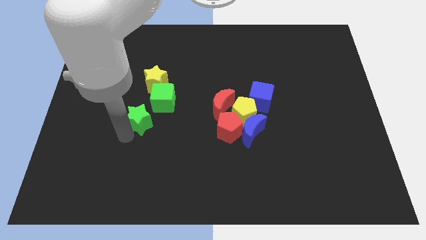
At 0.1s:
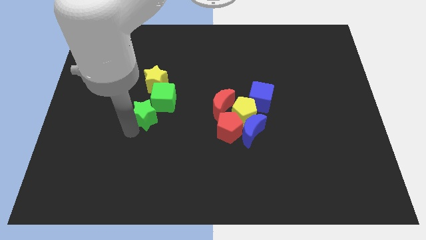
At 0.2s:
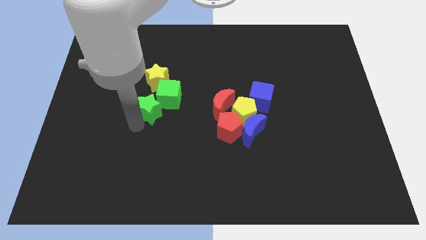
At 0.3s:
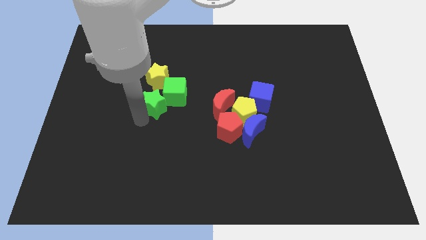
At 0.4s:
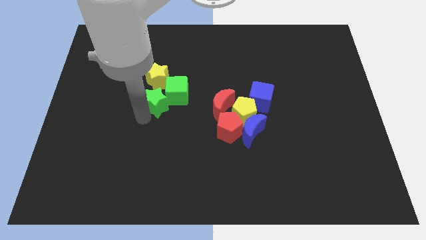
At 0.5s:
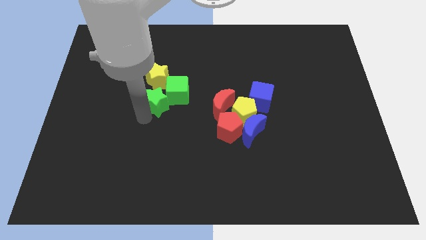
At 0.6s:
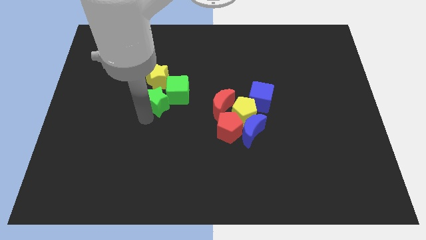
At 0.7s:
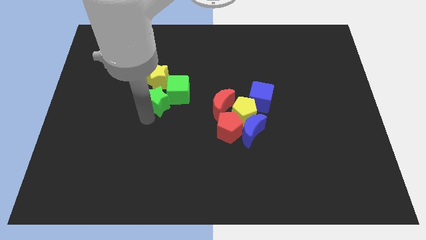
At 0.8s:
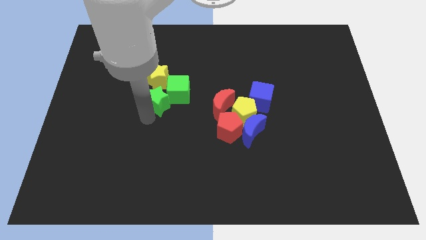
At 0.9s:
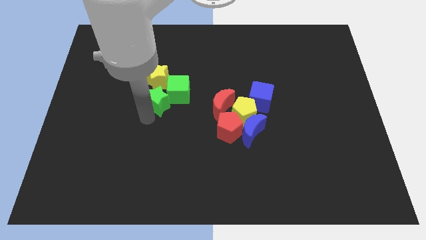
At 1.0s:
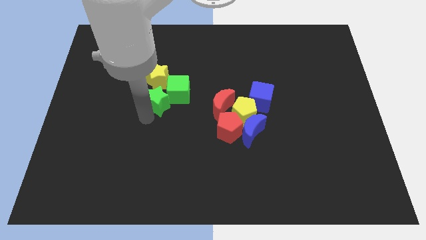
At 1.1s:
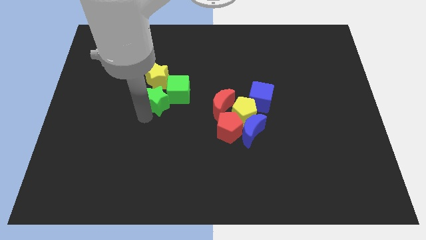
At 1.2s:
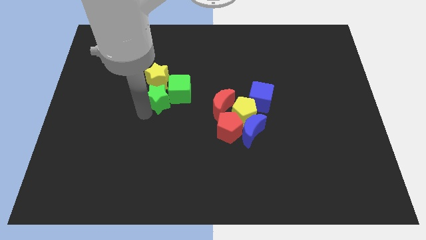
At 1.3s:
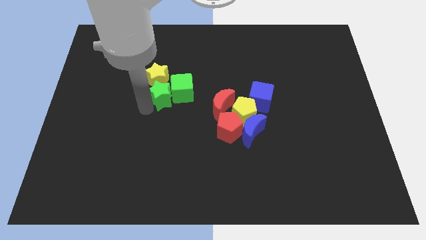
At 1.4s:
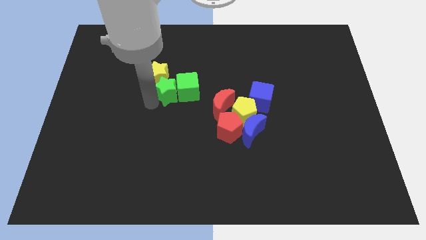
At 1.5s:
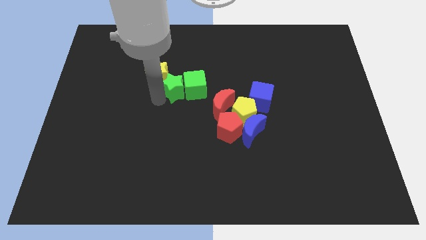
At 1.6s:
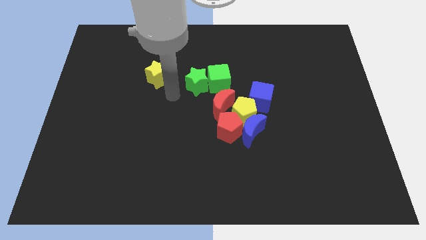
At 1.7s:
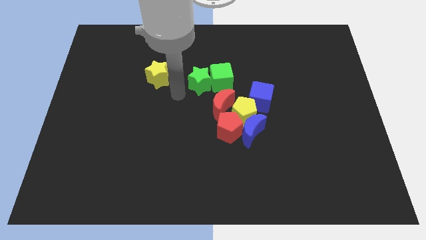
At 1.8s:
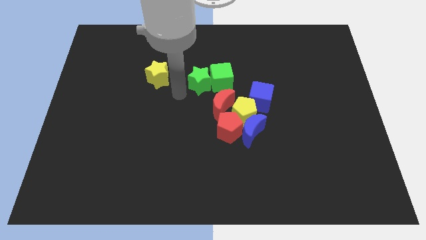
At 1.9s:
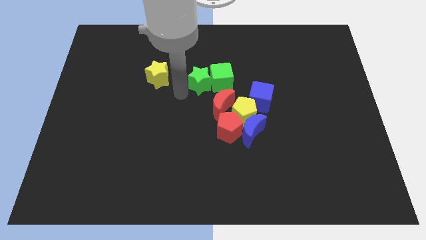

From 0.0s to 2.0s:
separate the green blocks from the yellow star

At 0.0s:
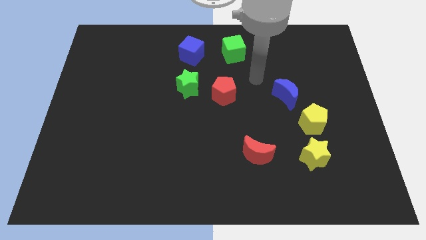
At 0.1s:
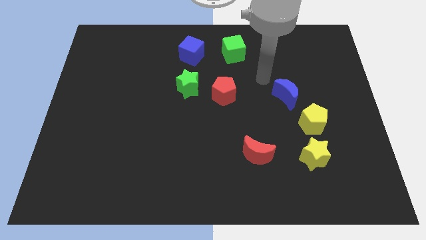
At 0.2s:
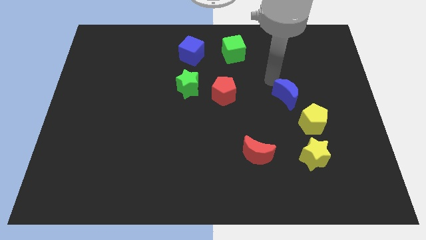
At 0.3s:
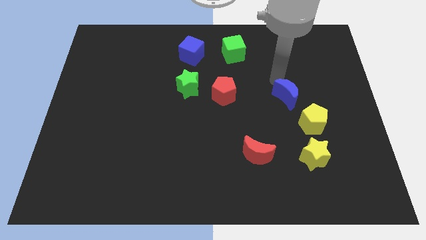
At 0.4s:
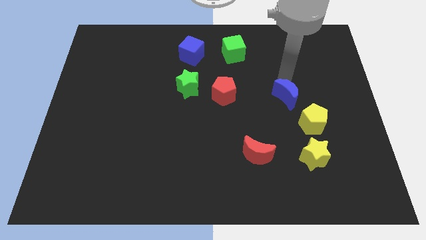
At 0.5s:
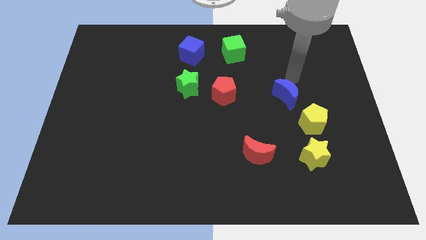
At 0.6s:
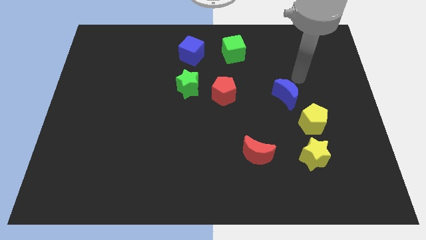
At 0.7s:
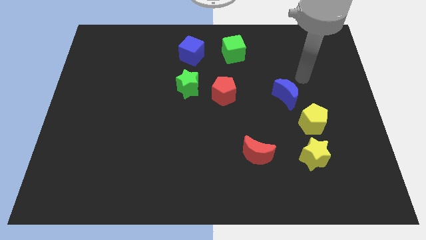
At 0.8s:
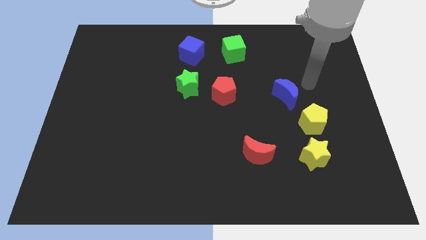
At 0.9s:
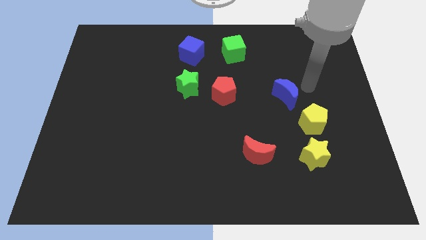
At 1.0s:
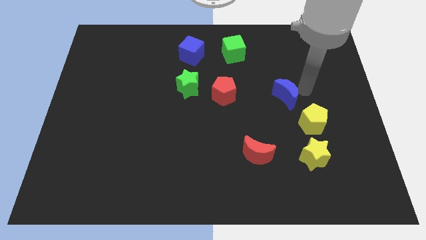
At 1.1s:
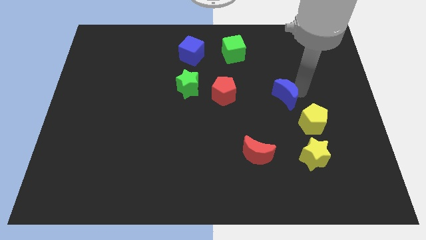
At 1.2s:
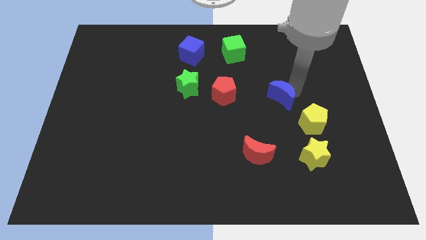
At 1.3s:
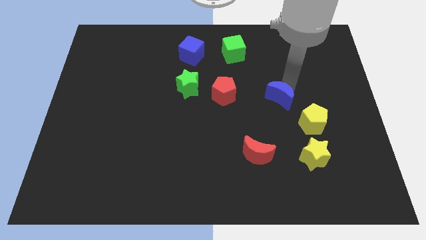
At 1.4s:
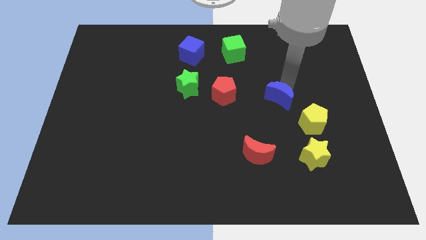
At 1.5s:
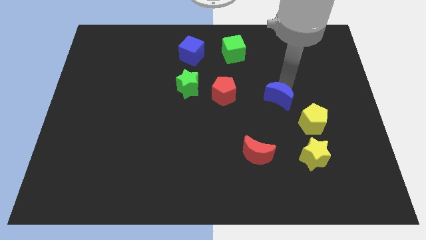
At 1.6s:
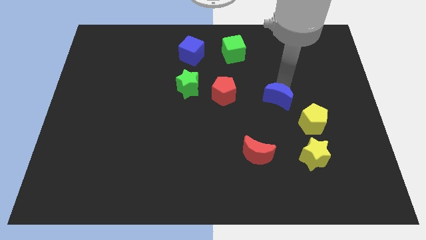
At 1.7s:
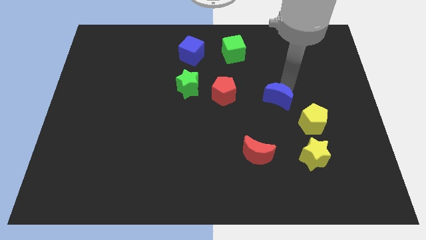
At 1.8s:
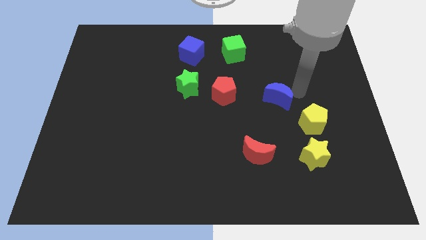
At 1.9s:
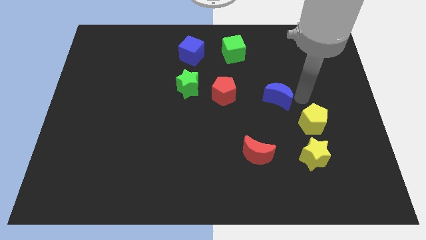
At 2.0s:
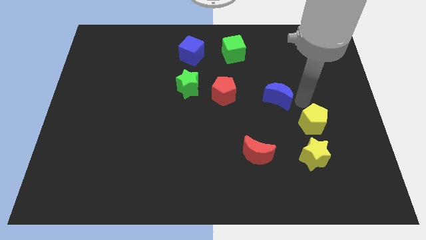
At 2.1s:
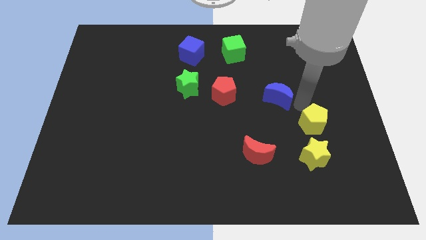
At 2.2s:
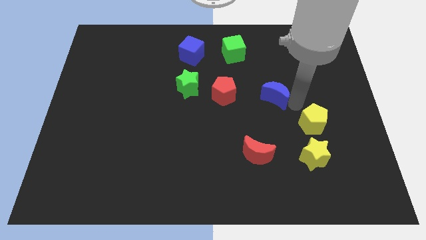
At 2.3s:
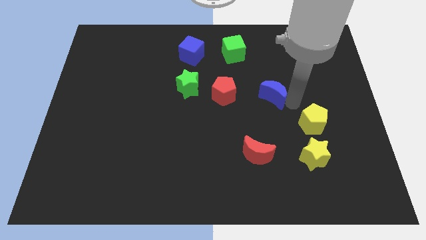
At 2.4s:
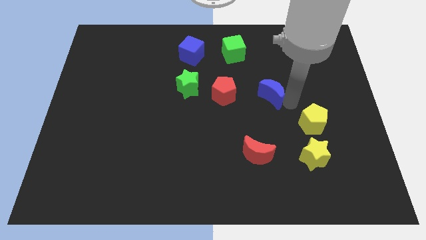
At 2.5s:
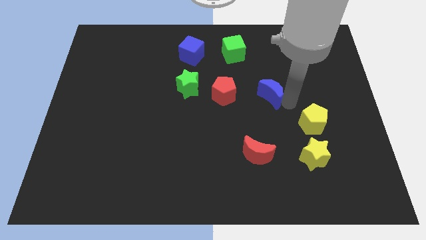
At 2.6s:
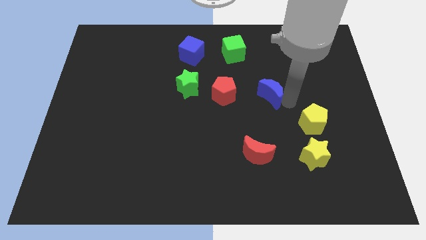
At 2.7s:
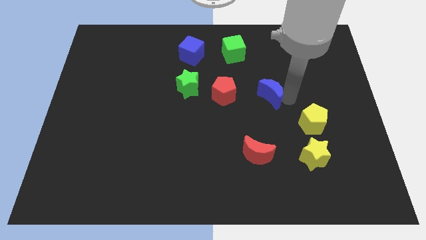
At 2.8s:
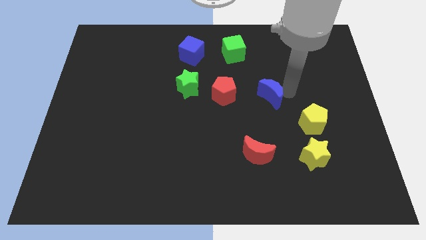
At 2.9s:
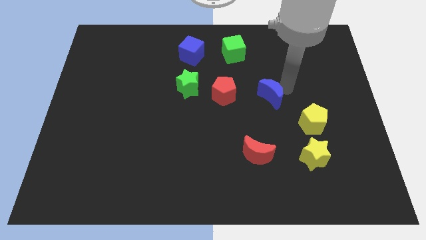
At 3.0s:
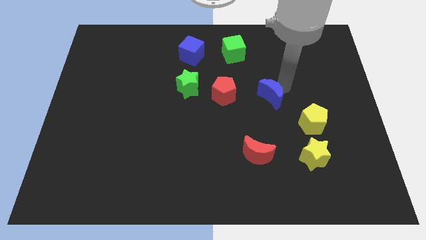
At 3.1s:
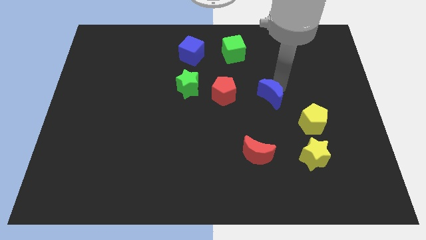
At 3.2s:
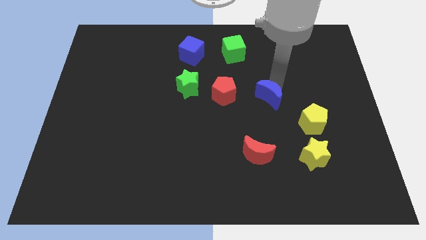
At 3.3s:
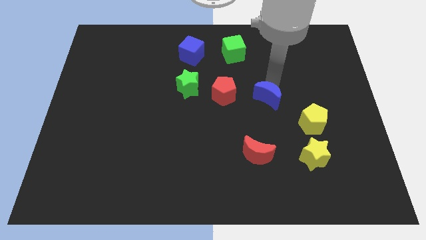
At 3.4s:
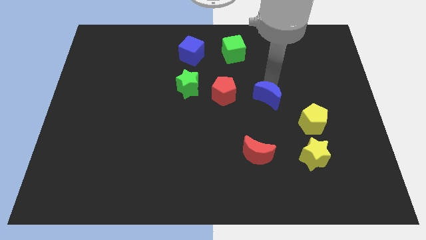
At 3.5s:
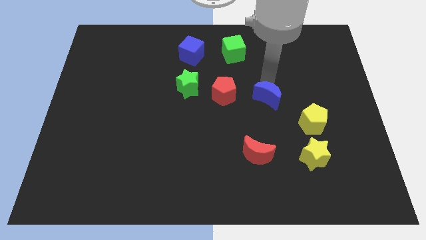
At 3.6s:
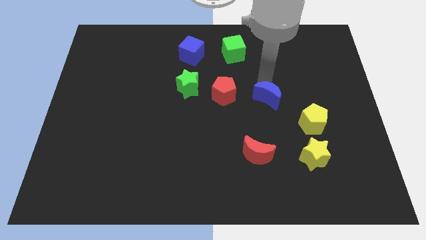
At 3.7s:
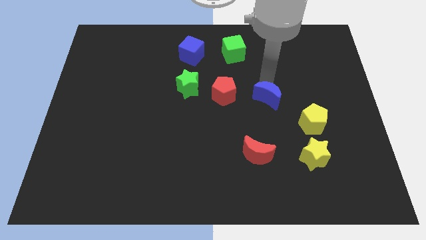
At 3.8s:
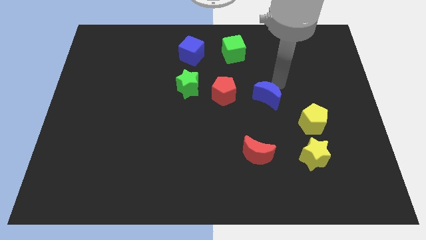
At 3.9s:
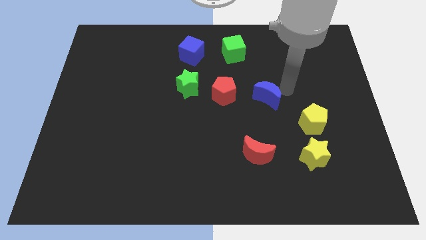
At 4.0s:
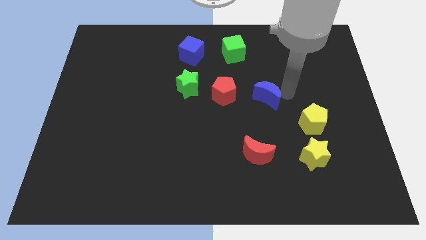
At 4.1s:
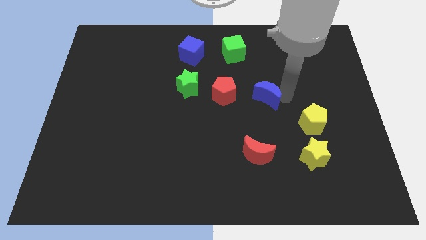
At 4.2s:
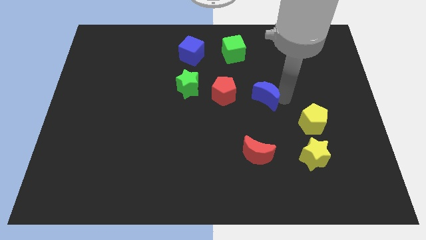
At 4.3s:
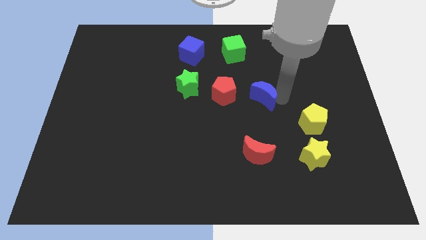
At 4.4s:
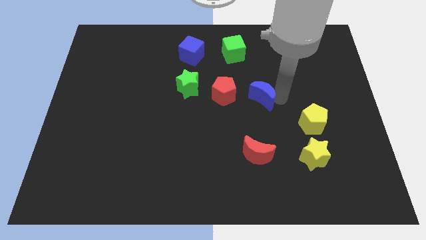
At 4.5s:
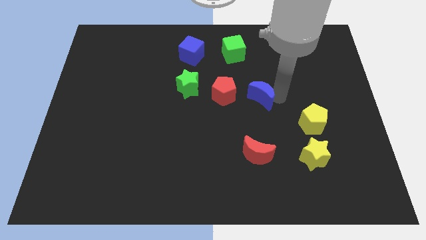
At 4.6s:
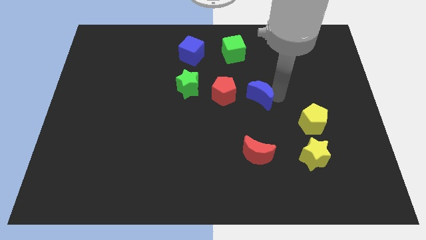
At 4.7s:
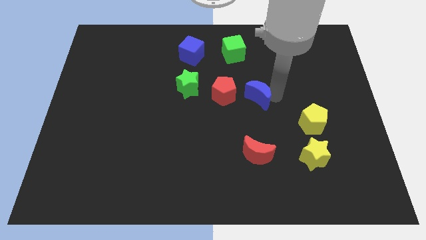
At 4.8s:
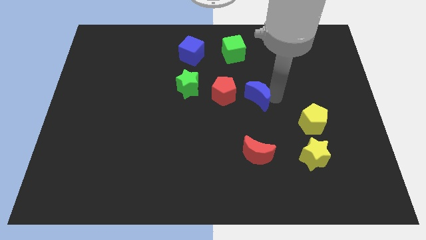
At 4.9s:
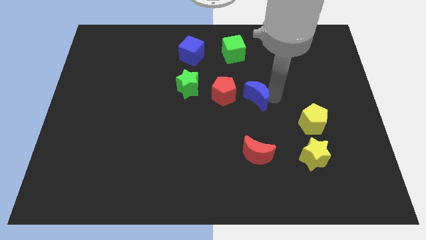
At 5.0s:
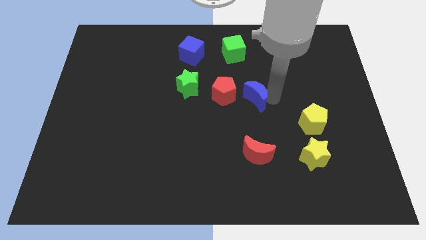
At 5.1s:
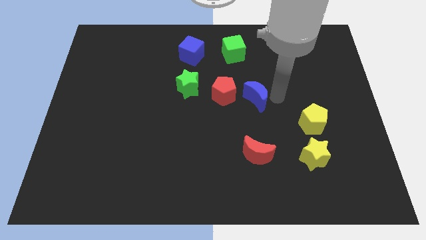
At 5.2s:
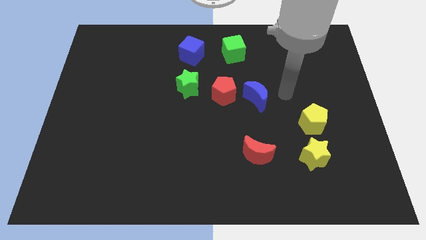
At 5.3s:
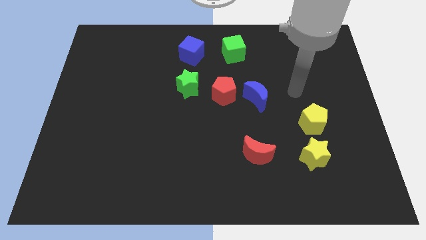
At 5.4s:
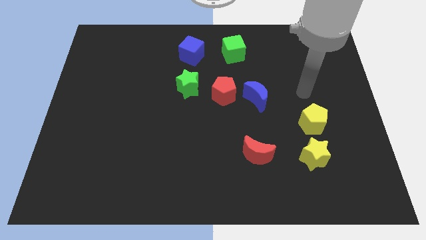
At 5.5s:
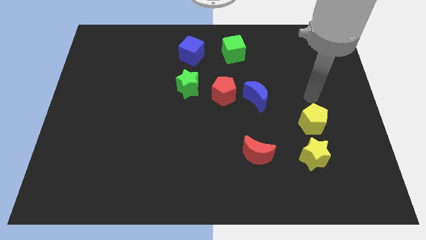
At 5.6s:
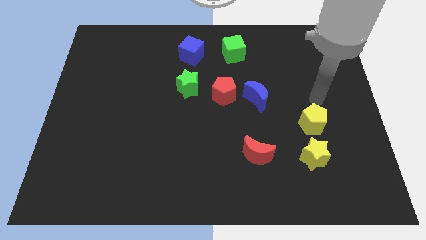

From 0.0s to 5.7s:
move the blue moon to the right of the red pentagon

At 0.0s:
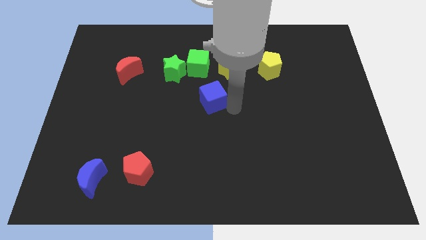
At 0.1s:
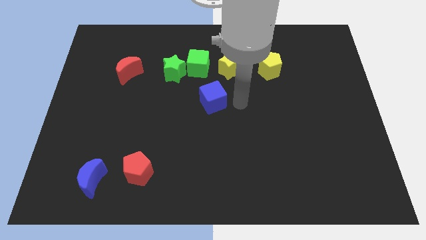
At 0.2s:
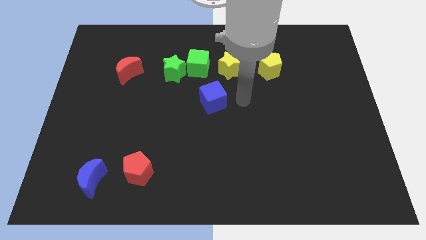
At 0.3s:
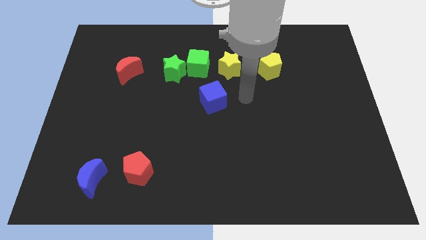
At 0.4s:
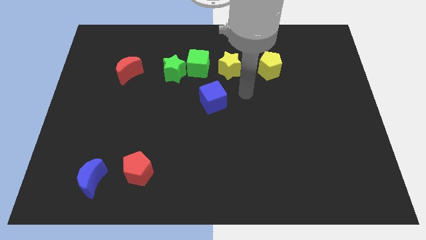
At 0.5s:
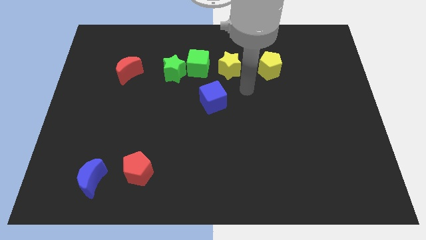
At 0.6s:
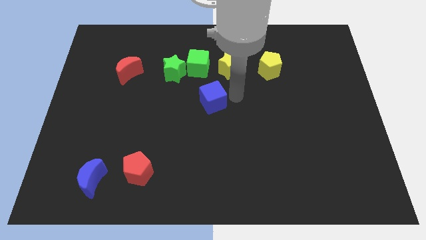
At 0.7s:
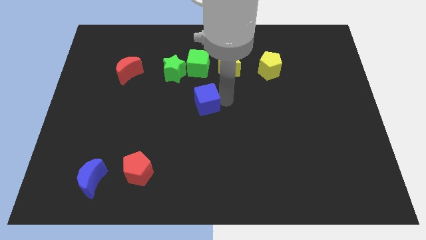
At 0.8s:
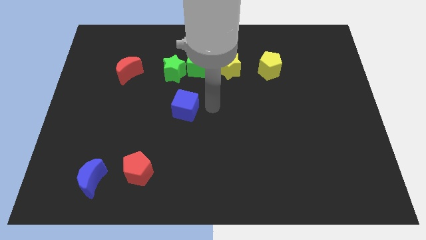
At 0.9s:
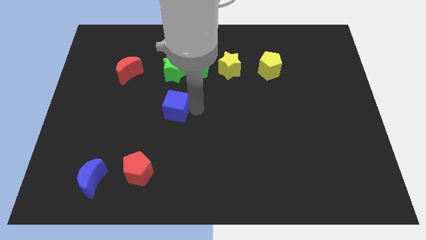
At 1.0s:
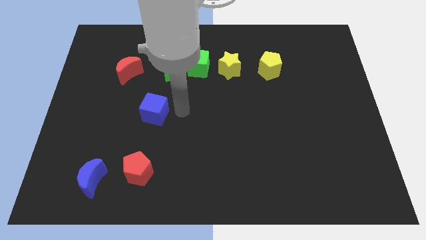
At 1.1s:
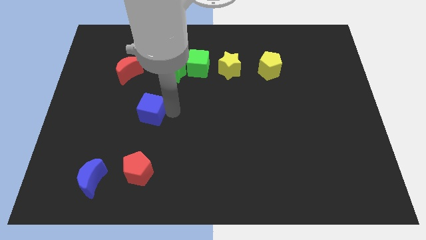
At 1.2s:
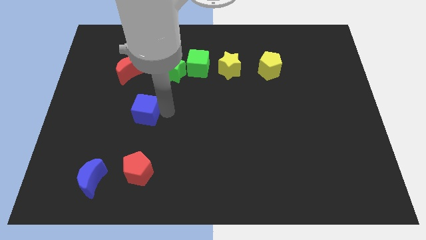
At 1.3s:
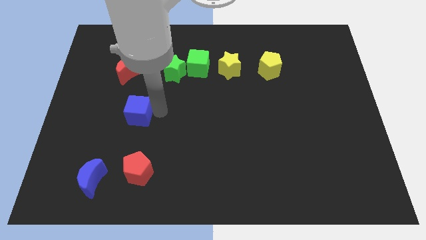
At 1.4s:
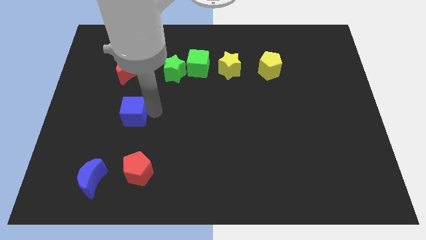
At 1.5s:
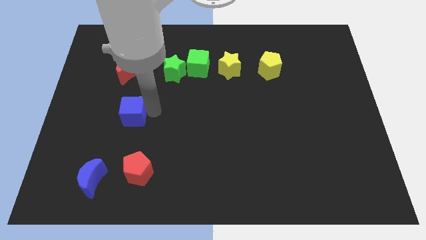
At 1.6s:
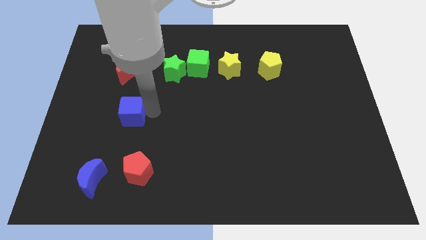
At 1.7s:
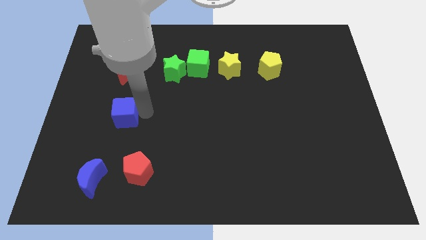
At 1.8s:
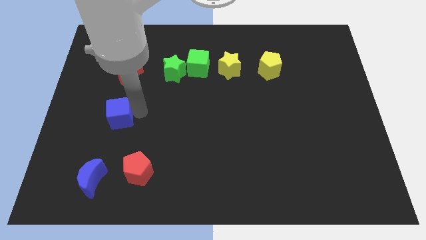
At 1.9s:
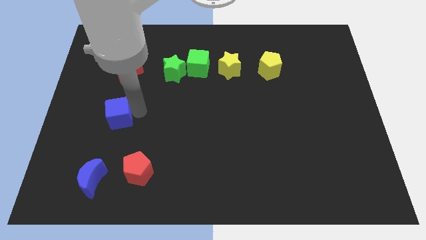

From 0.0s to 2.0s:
place the blue cube below the red moon
